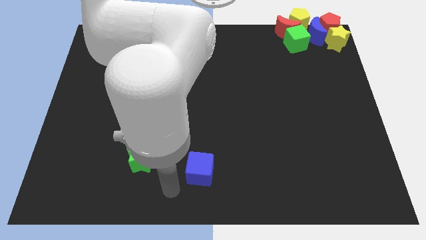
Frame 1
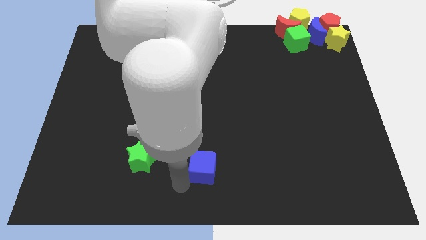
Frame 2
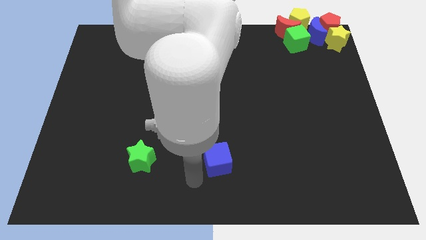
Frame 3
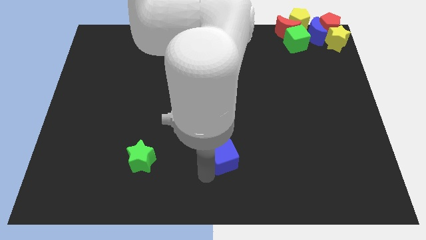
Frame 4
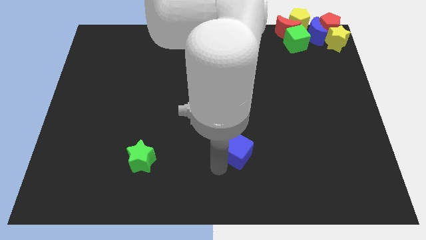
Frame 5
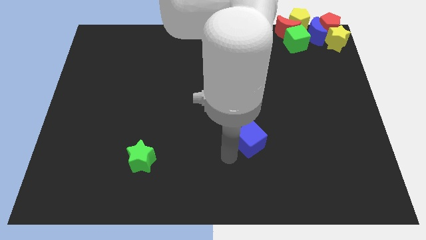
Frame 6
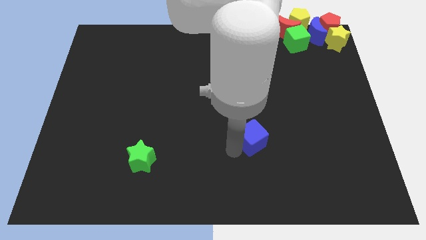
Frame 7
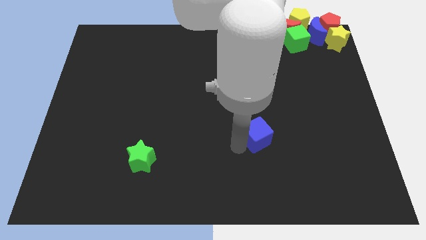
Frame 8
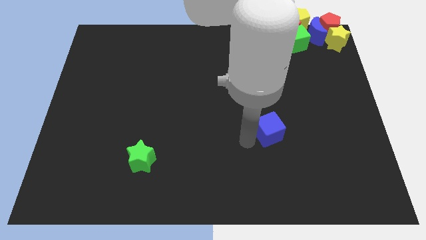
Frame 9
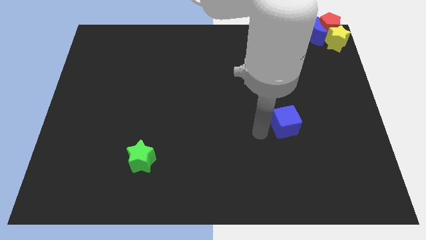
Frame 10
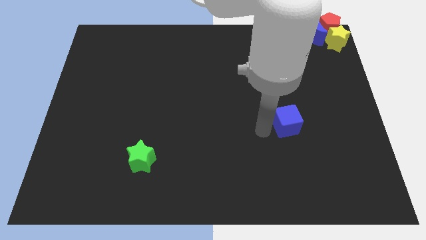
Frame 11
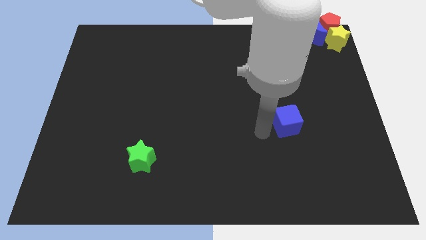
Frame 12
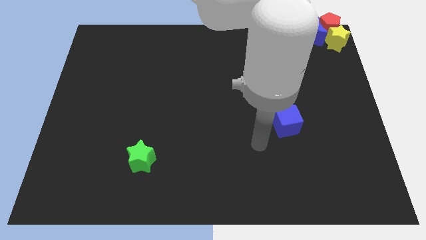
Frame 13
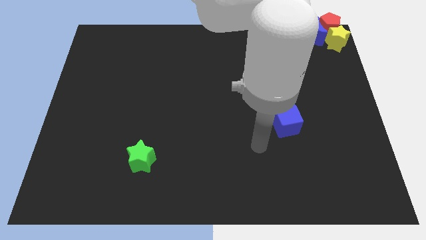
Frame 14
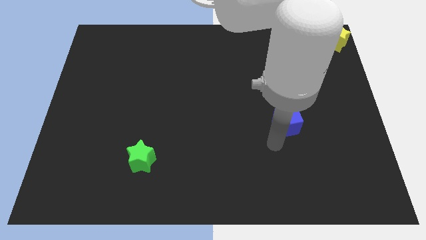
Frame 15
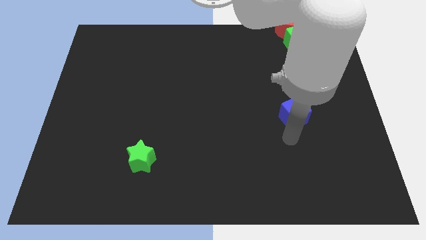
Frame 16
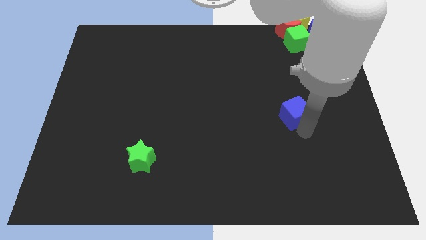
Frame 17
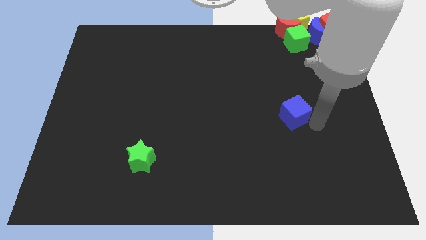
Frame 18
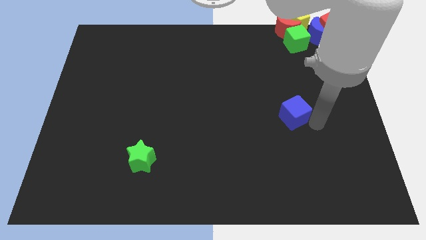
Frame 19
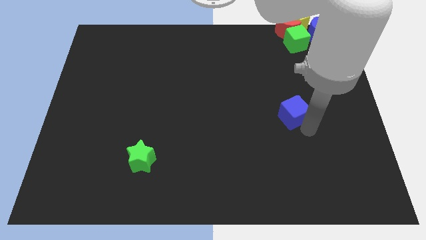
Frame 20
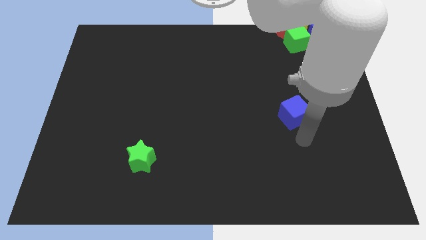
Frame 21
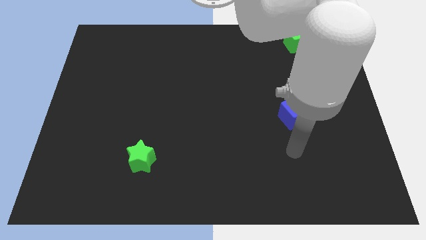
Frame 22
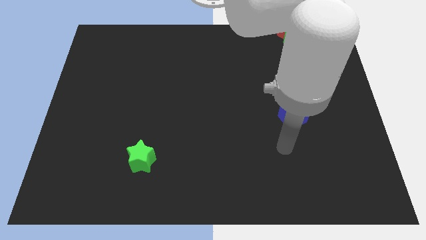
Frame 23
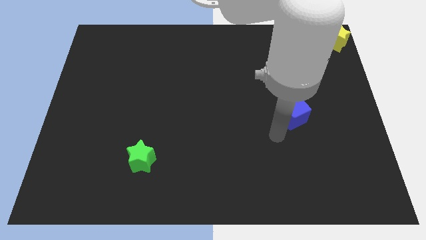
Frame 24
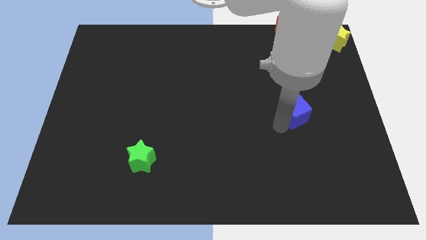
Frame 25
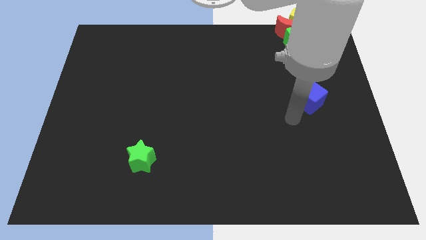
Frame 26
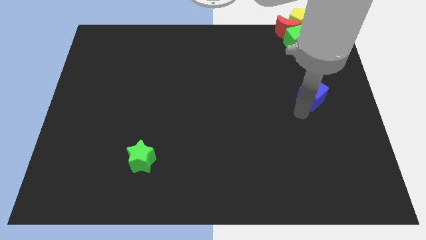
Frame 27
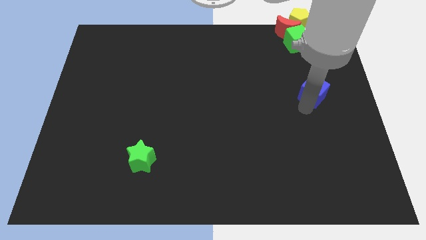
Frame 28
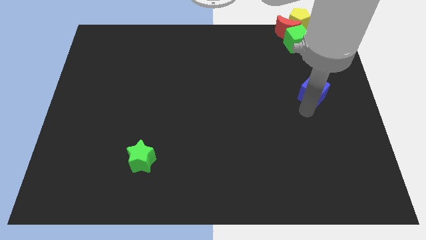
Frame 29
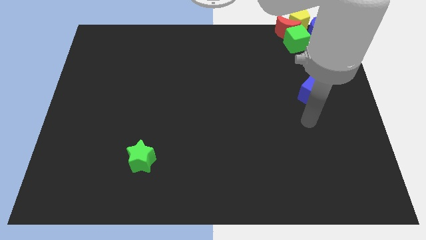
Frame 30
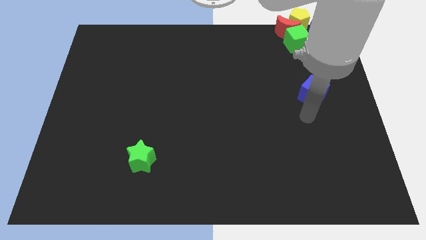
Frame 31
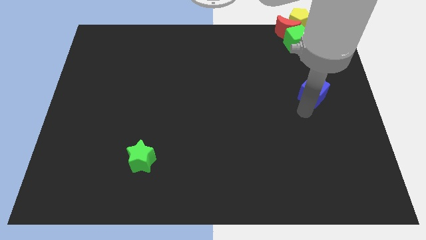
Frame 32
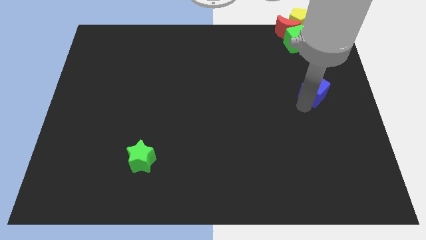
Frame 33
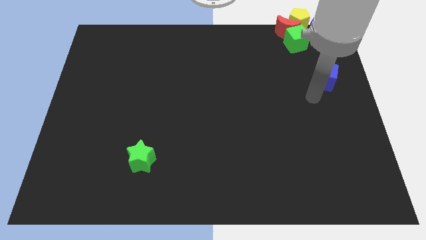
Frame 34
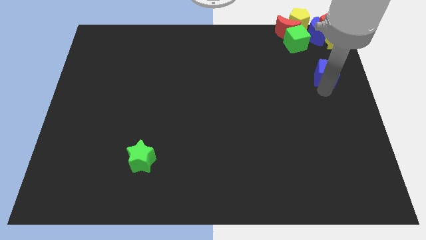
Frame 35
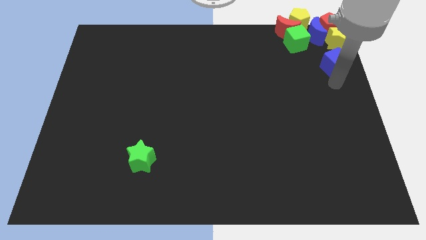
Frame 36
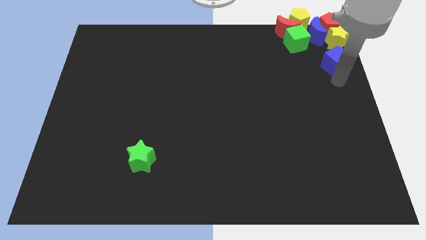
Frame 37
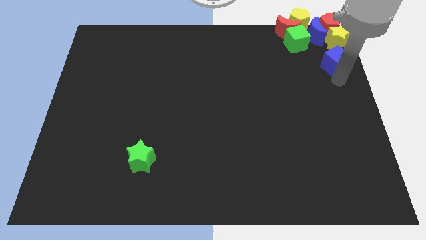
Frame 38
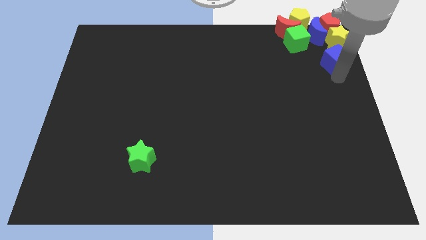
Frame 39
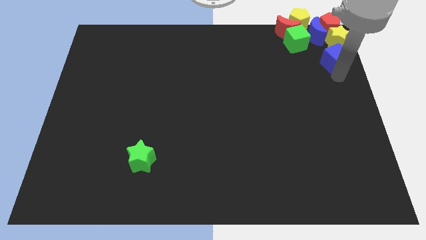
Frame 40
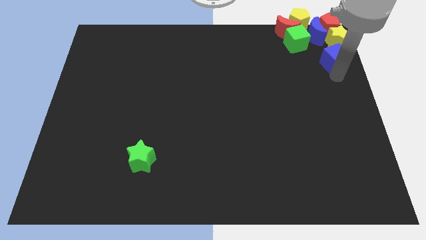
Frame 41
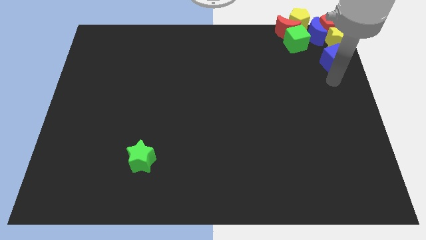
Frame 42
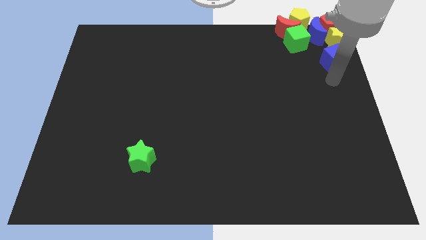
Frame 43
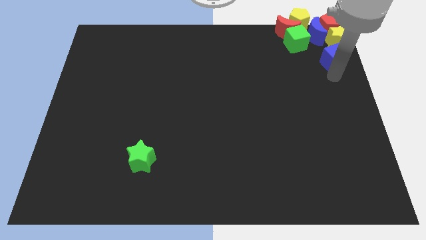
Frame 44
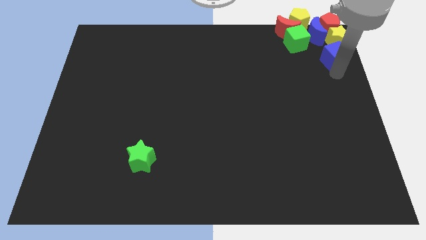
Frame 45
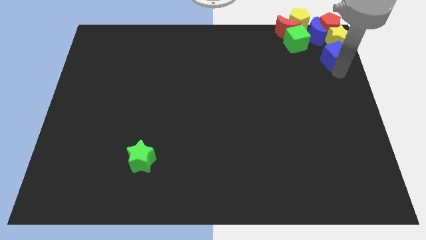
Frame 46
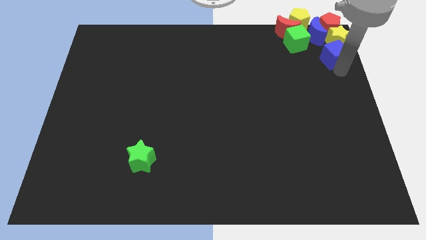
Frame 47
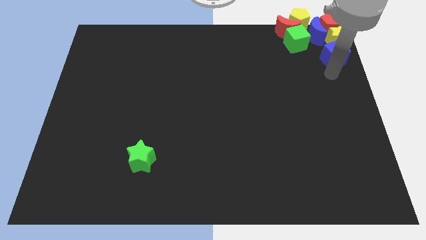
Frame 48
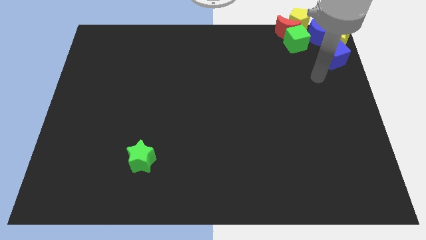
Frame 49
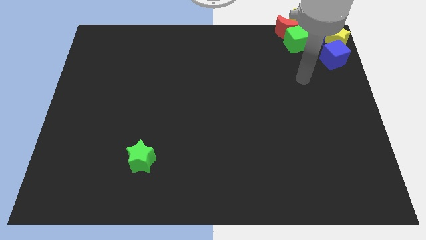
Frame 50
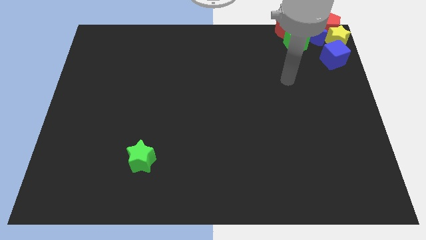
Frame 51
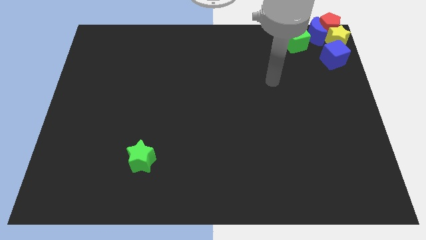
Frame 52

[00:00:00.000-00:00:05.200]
move blue cube towards yellow star

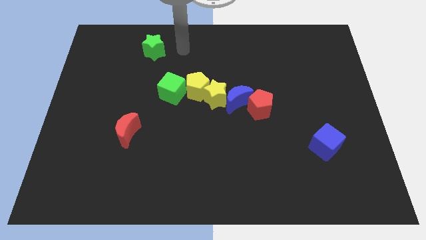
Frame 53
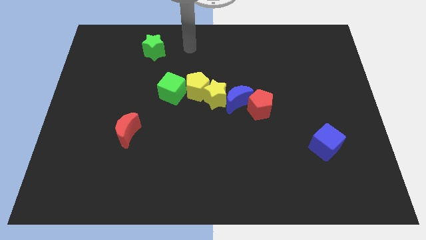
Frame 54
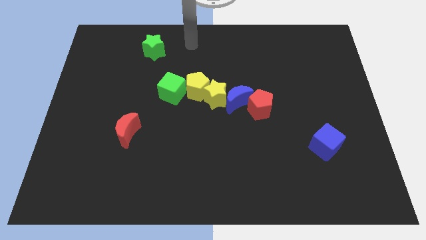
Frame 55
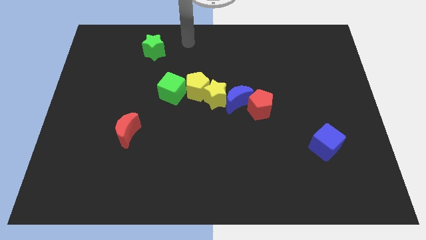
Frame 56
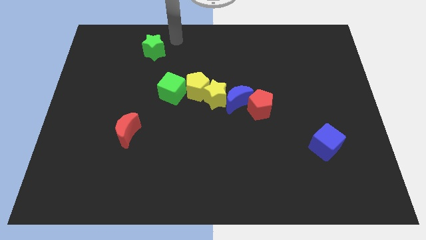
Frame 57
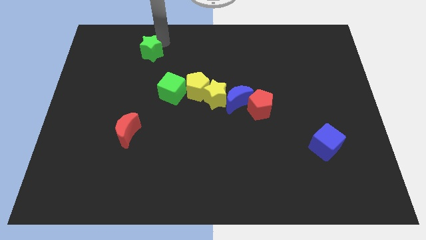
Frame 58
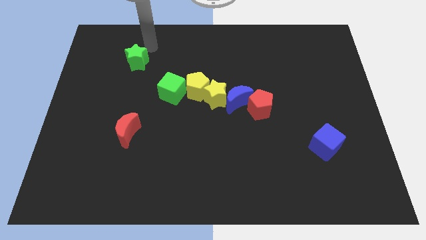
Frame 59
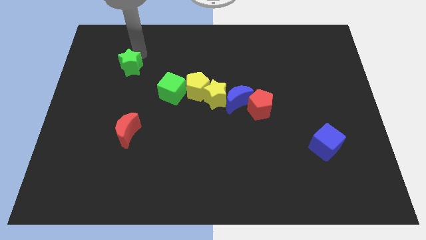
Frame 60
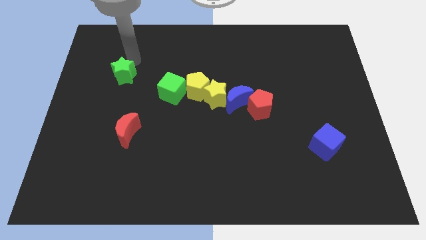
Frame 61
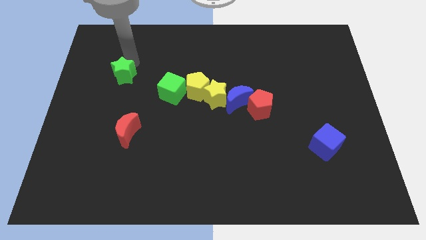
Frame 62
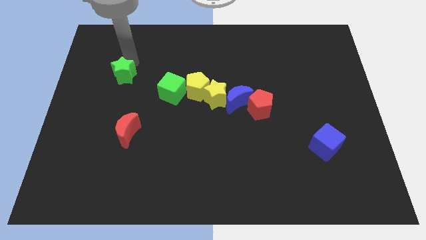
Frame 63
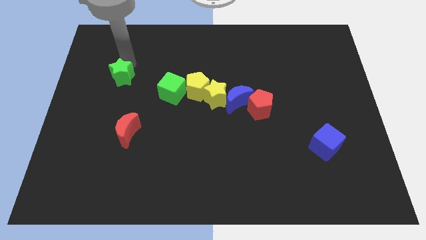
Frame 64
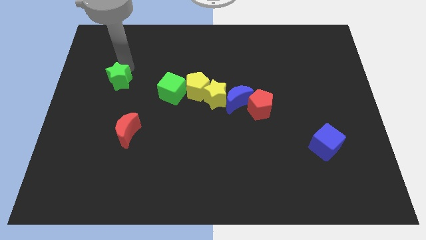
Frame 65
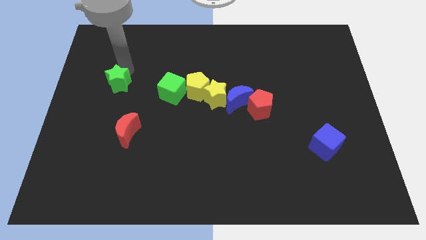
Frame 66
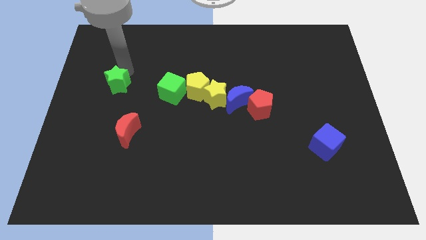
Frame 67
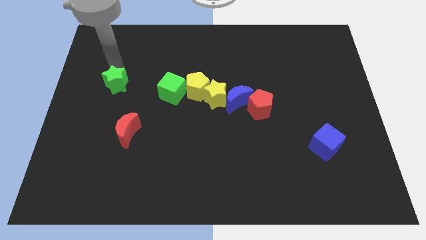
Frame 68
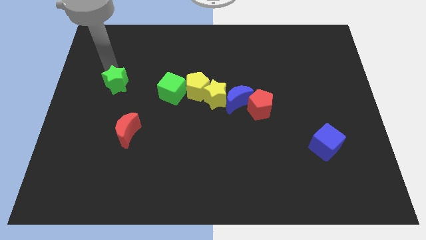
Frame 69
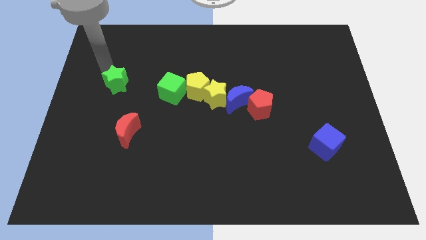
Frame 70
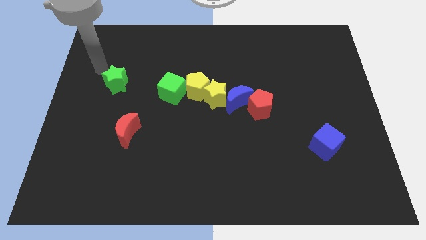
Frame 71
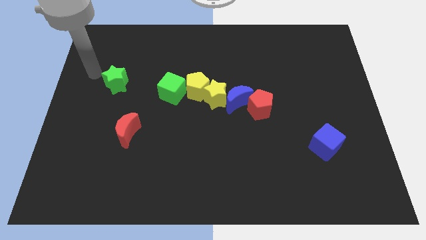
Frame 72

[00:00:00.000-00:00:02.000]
place the green star left to the green cube

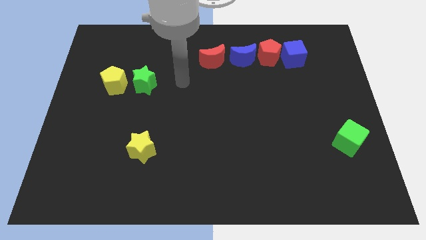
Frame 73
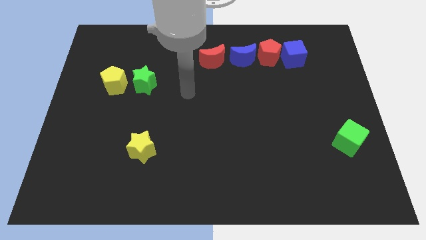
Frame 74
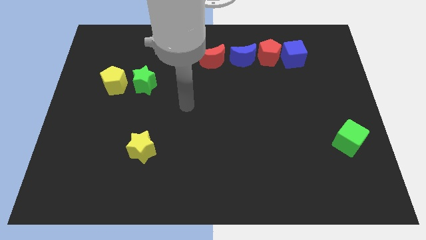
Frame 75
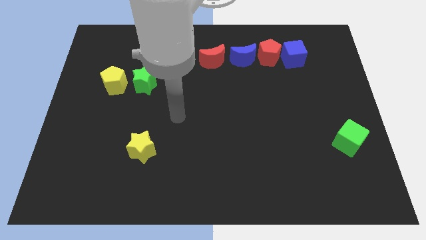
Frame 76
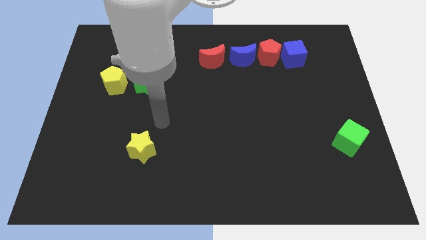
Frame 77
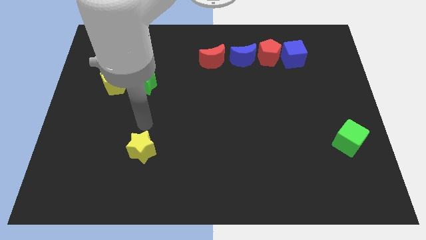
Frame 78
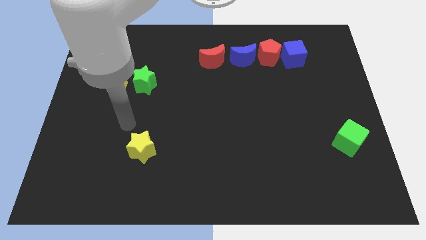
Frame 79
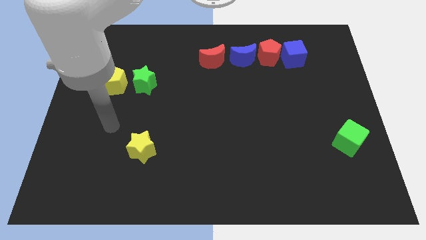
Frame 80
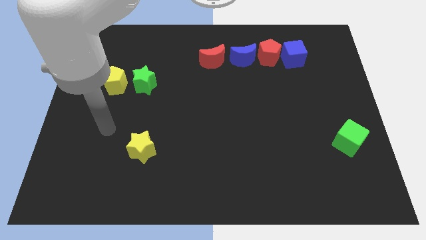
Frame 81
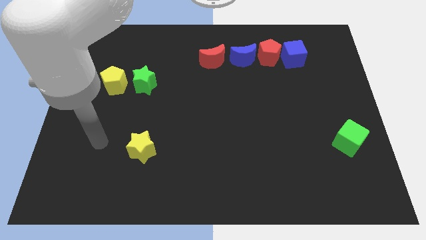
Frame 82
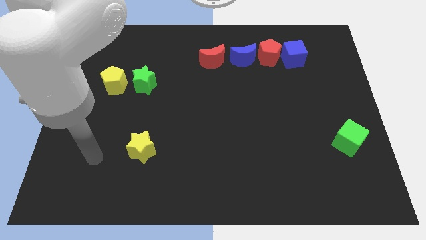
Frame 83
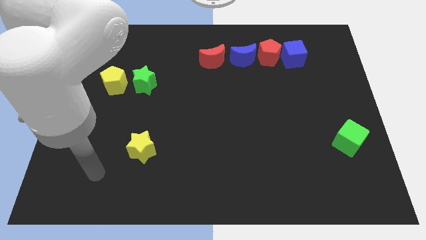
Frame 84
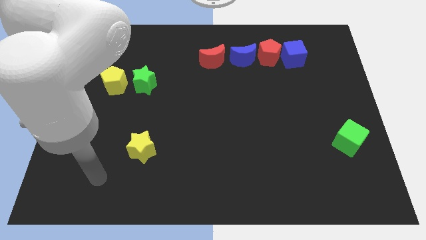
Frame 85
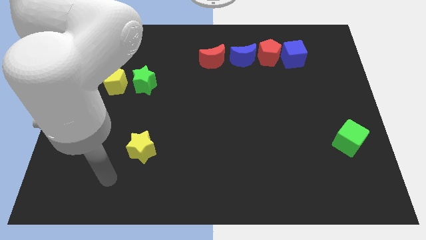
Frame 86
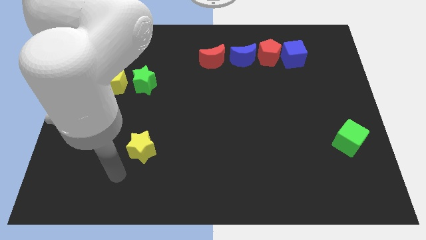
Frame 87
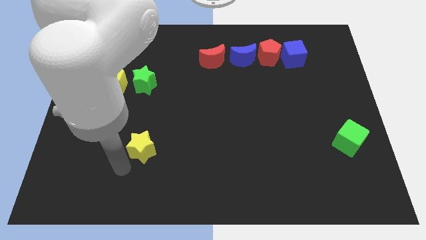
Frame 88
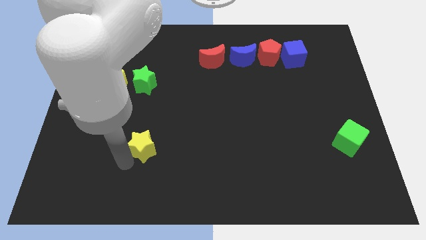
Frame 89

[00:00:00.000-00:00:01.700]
tap the yellow star

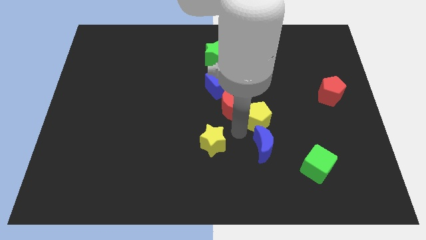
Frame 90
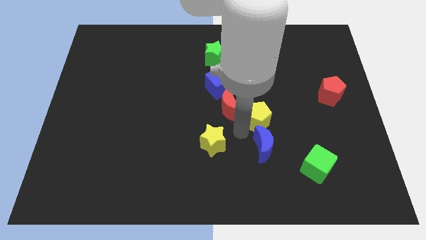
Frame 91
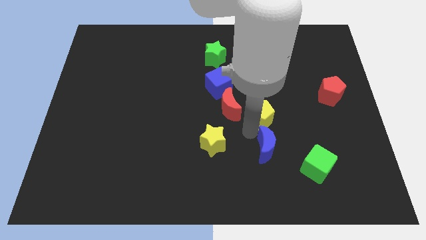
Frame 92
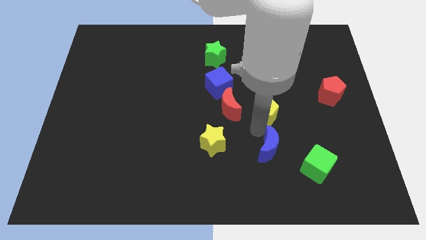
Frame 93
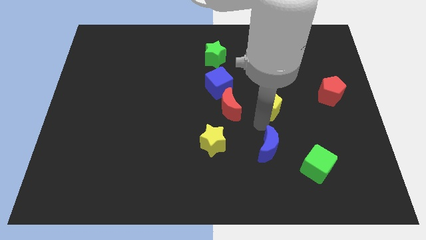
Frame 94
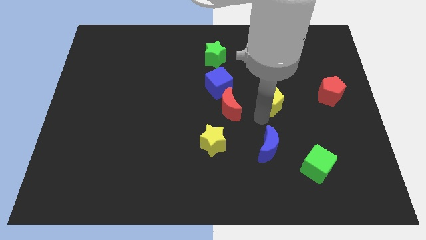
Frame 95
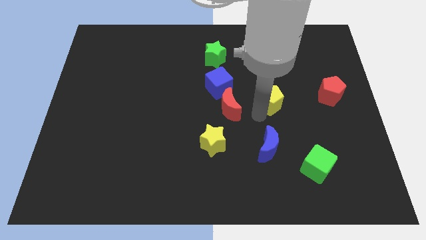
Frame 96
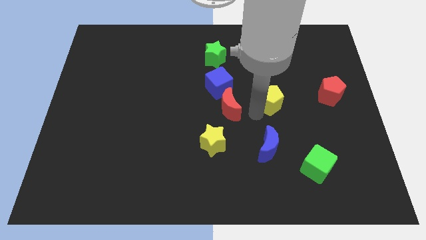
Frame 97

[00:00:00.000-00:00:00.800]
separate the yellow pentagon and the blue crescent
